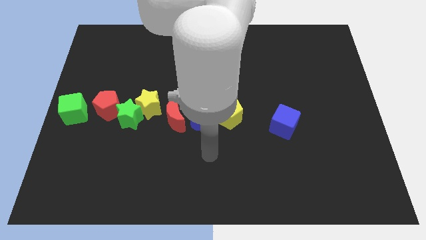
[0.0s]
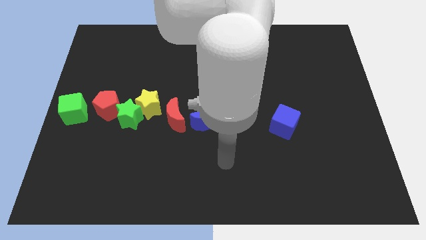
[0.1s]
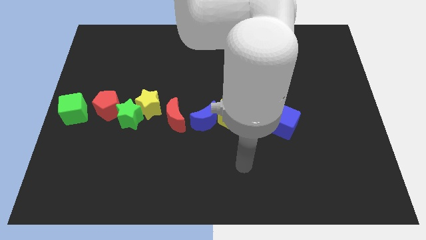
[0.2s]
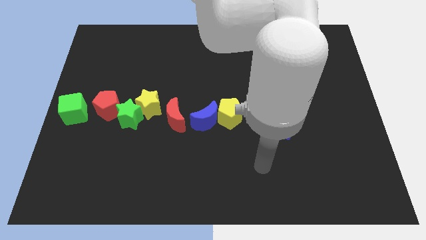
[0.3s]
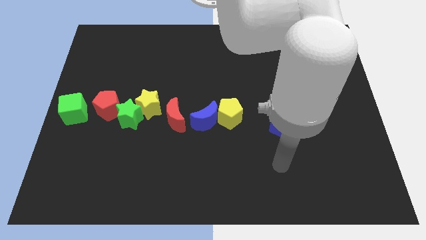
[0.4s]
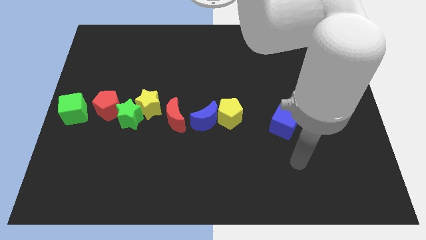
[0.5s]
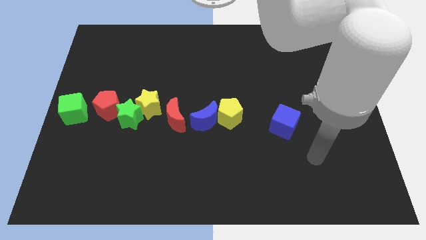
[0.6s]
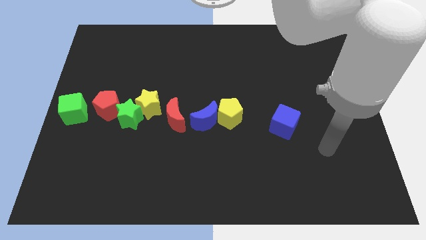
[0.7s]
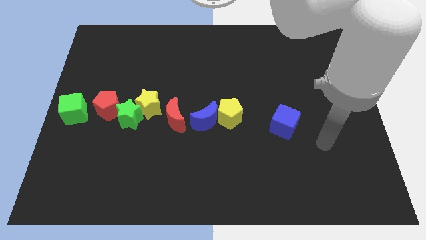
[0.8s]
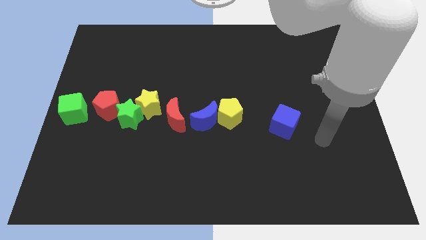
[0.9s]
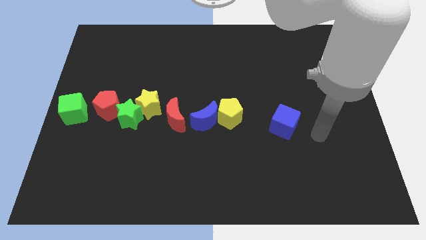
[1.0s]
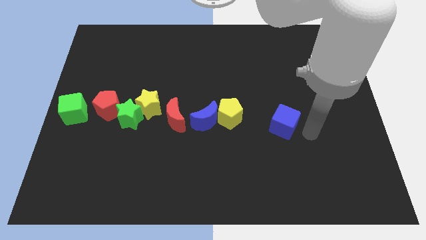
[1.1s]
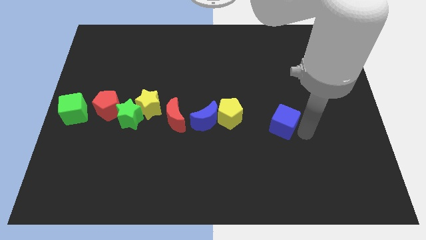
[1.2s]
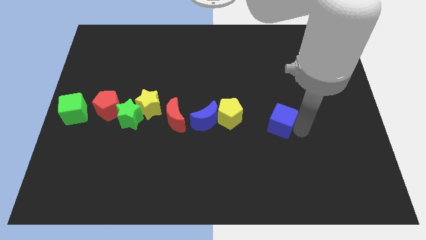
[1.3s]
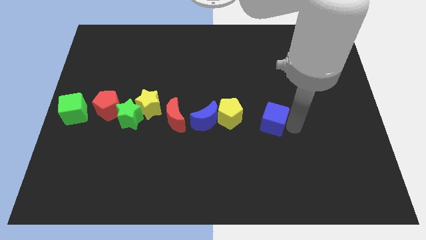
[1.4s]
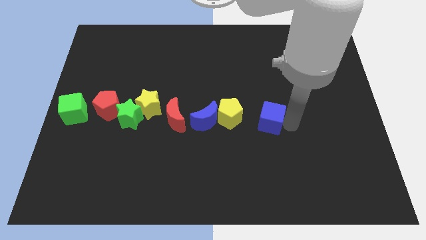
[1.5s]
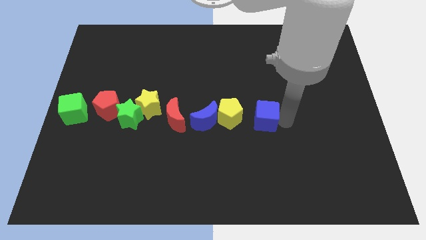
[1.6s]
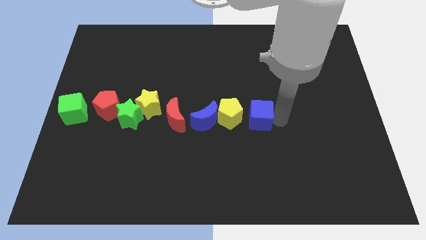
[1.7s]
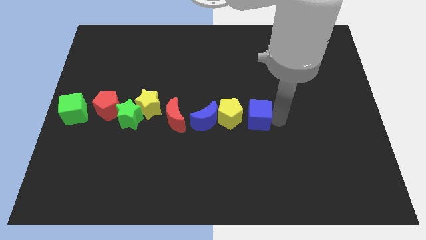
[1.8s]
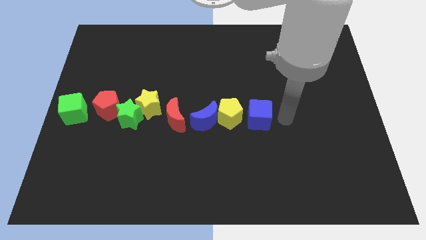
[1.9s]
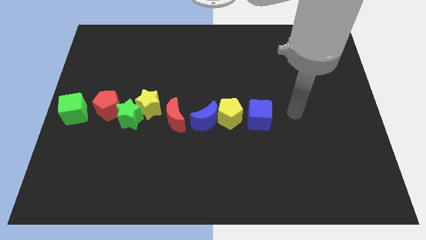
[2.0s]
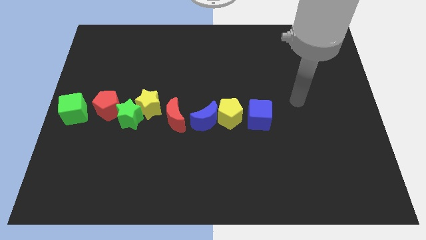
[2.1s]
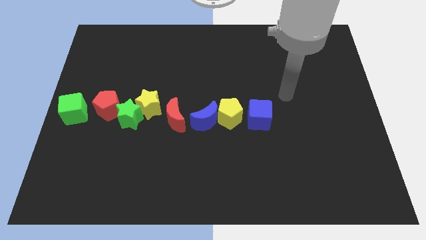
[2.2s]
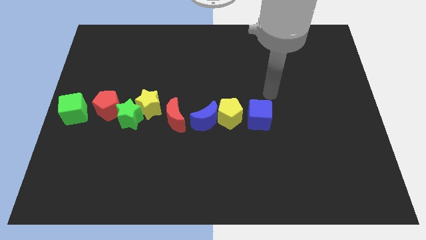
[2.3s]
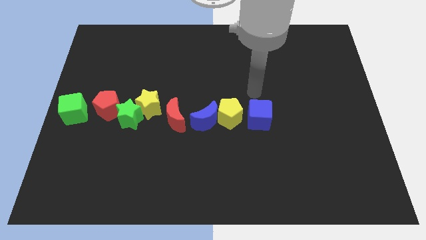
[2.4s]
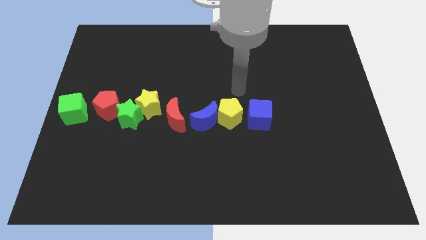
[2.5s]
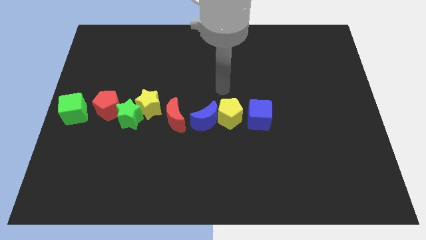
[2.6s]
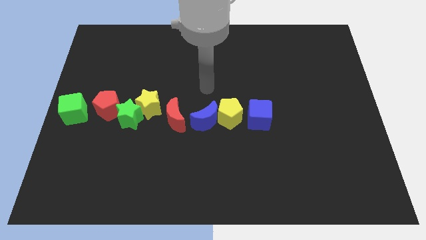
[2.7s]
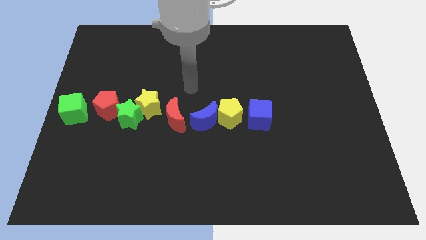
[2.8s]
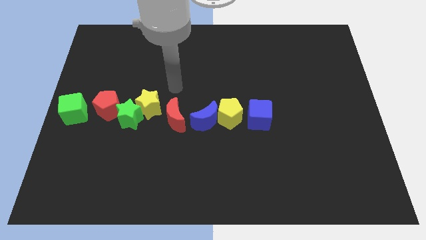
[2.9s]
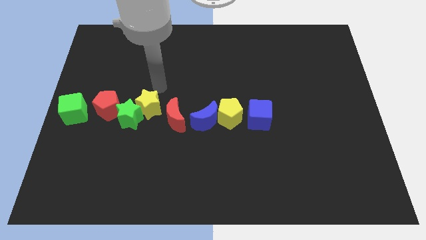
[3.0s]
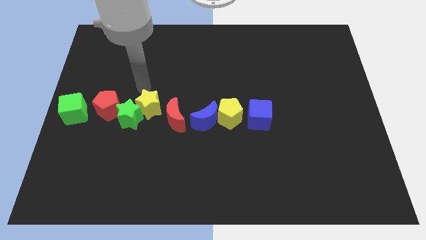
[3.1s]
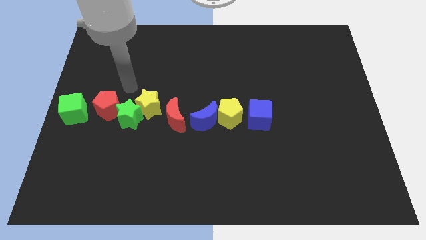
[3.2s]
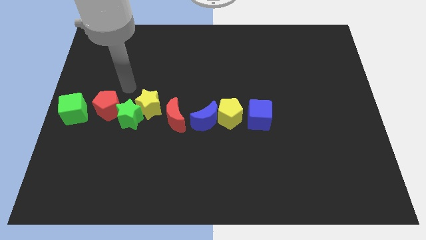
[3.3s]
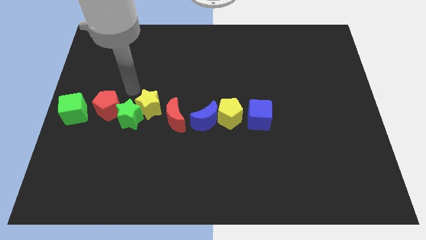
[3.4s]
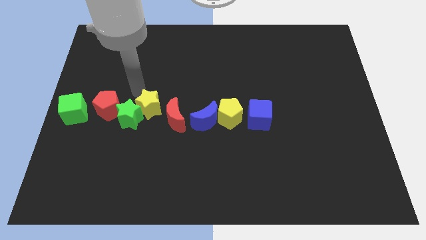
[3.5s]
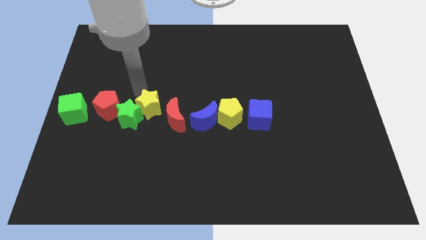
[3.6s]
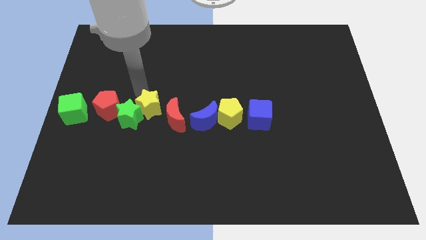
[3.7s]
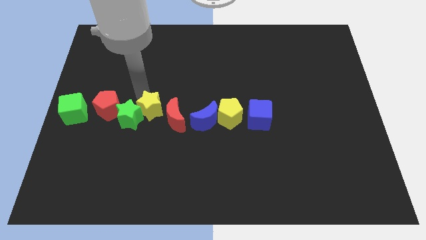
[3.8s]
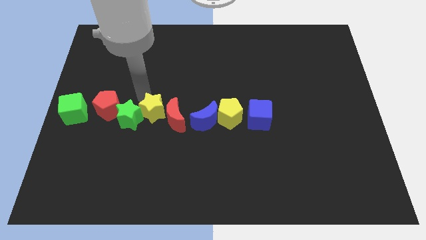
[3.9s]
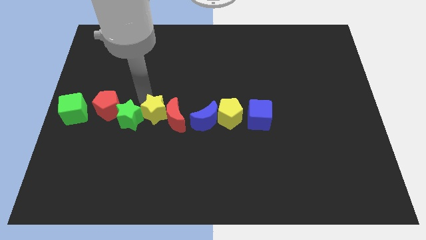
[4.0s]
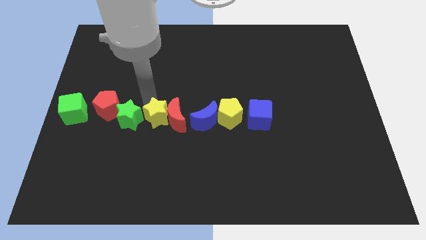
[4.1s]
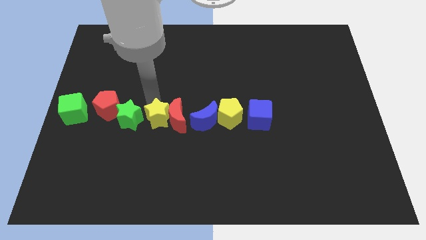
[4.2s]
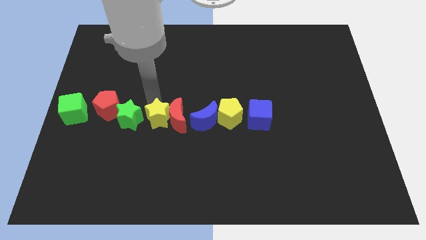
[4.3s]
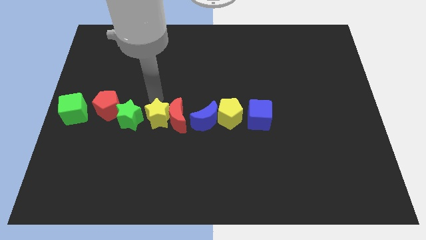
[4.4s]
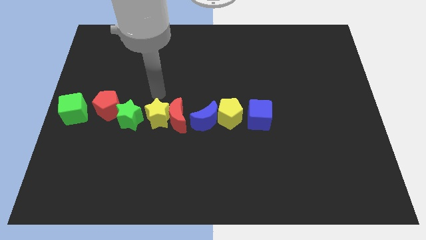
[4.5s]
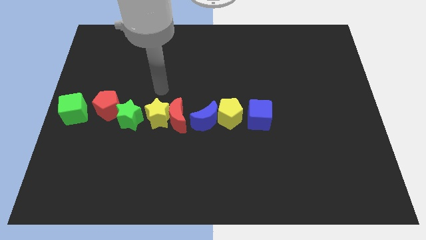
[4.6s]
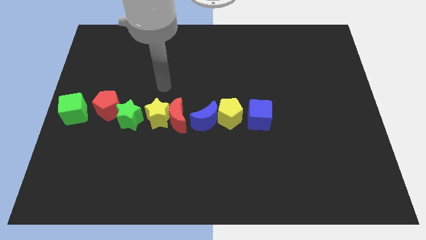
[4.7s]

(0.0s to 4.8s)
adjust the blue cube and the yellow star to form a line with a group of blocks

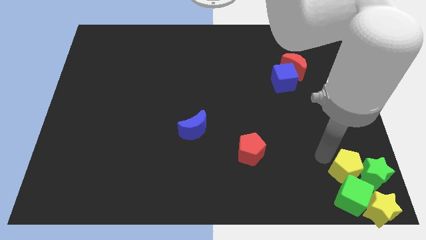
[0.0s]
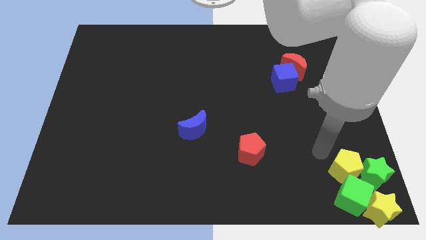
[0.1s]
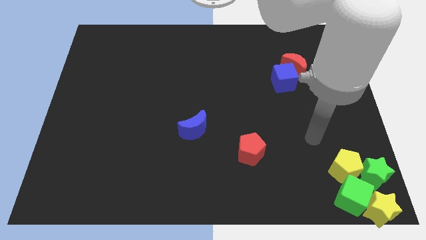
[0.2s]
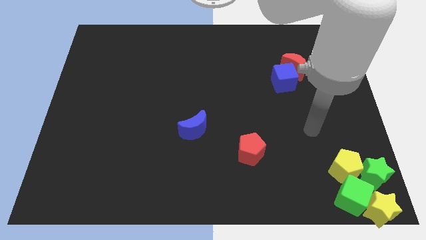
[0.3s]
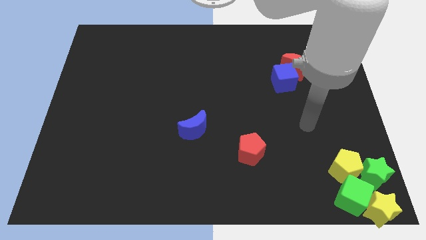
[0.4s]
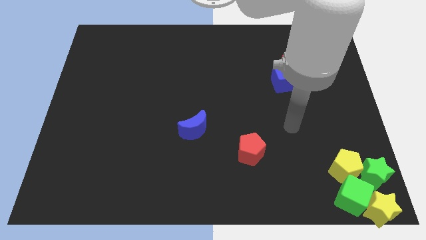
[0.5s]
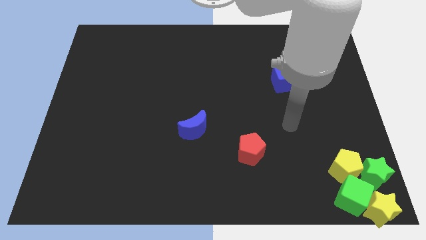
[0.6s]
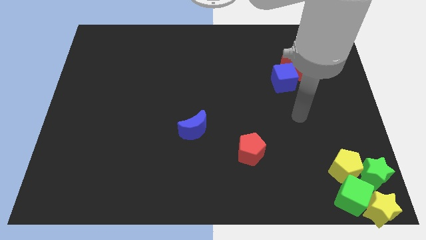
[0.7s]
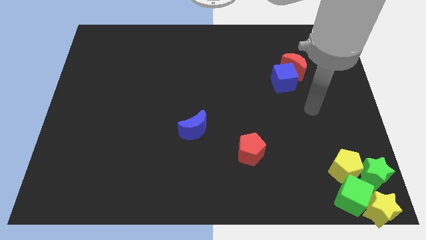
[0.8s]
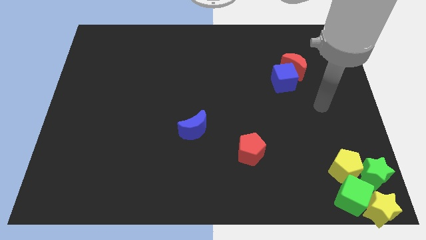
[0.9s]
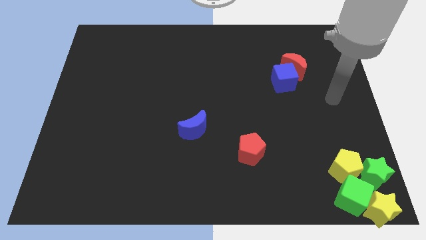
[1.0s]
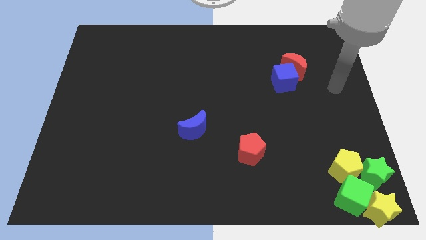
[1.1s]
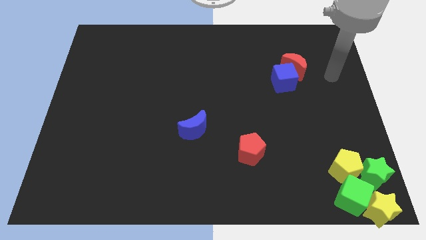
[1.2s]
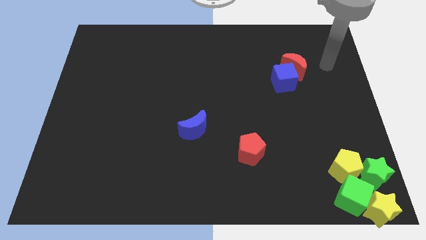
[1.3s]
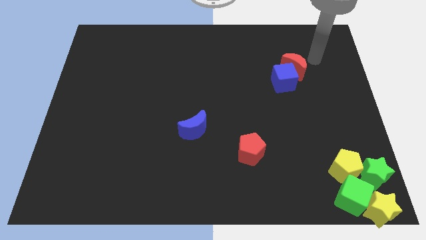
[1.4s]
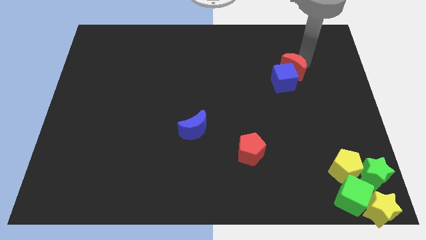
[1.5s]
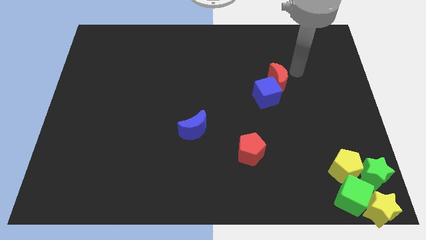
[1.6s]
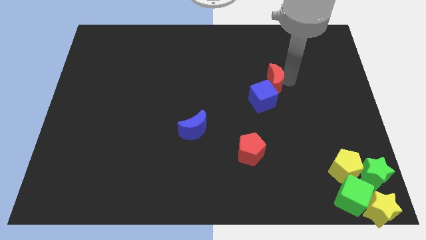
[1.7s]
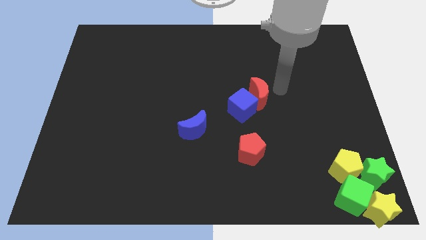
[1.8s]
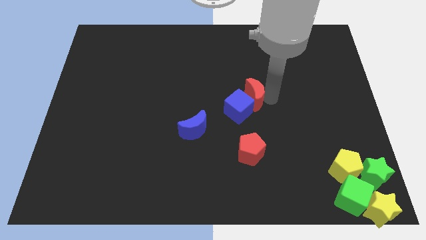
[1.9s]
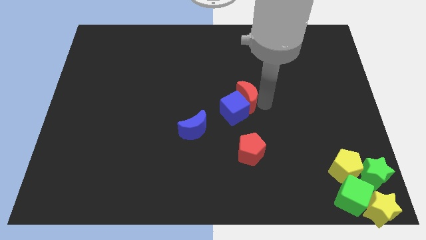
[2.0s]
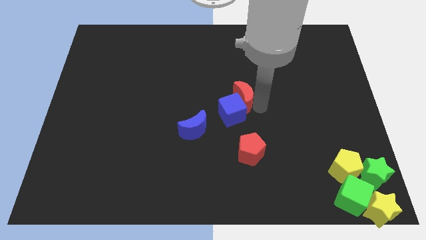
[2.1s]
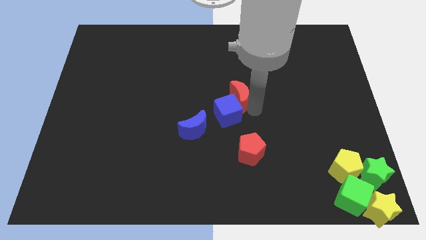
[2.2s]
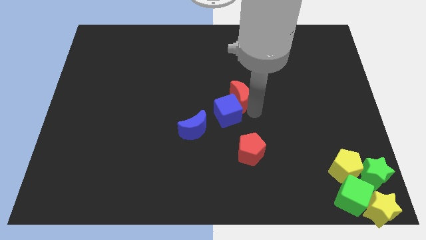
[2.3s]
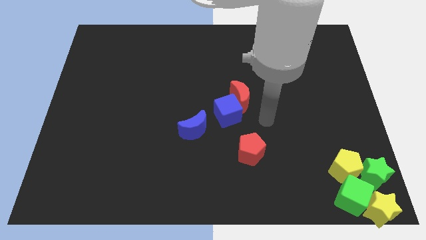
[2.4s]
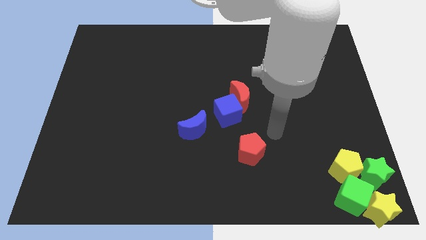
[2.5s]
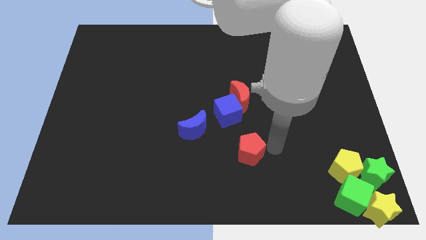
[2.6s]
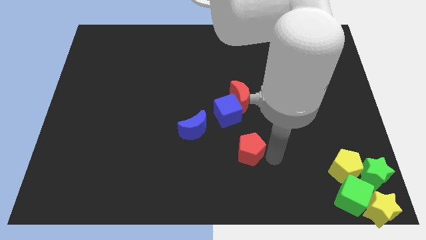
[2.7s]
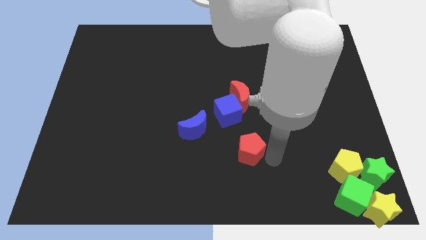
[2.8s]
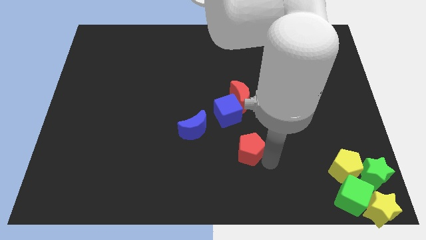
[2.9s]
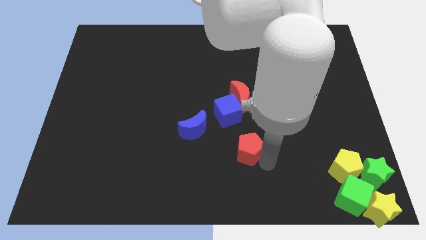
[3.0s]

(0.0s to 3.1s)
slide the red moon and the blue cube to the top right side of the blue moon

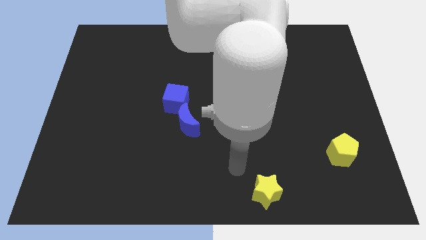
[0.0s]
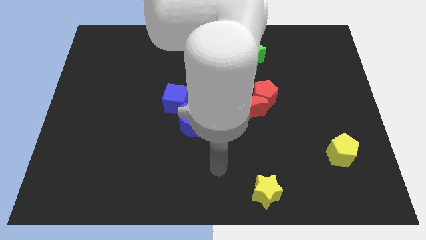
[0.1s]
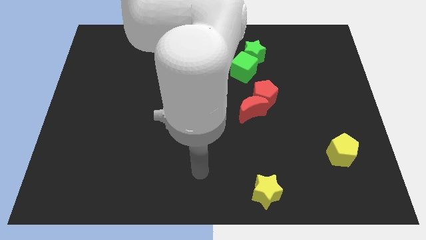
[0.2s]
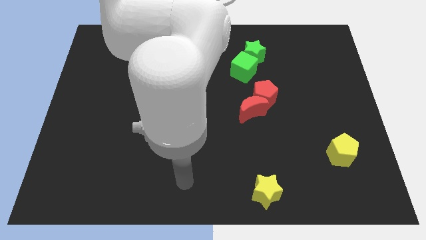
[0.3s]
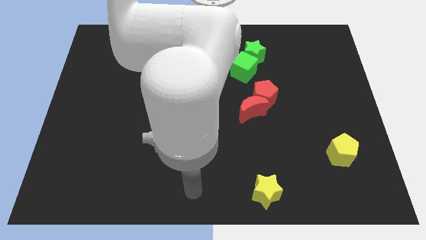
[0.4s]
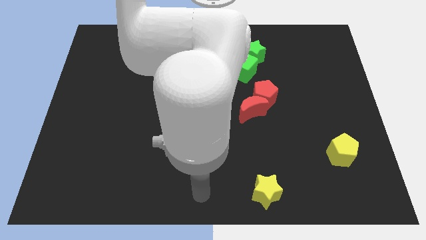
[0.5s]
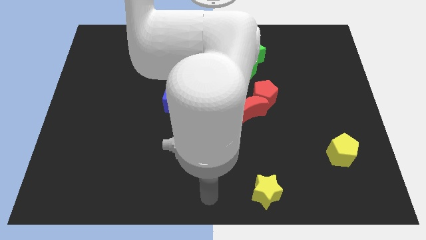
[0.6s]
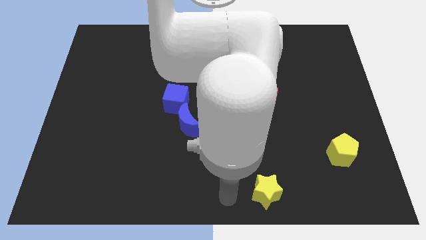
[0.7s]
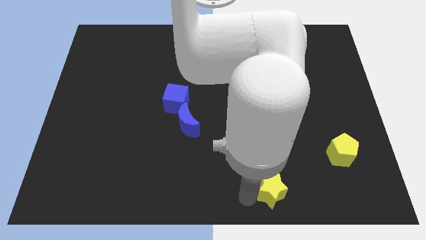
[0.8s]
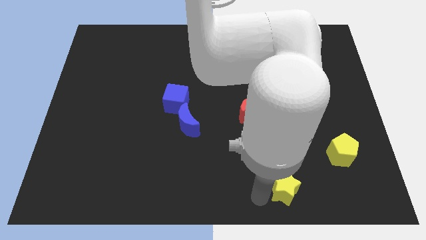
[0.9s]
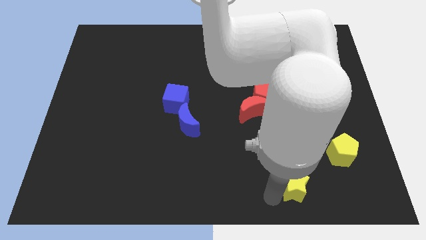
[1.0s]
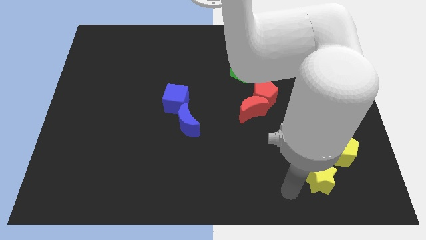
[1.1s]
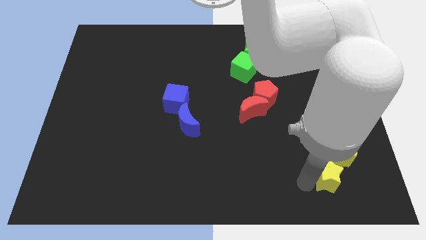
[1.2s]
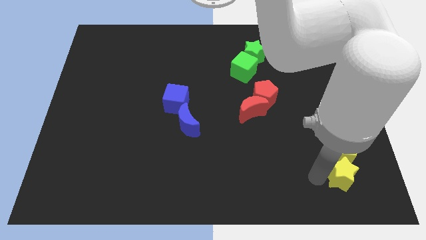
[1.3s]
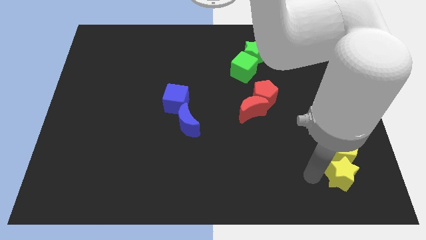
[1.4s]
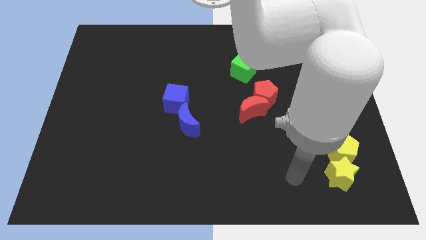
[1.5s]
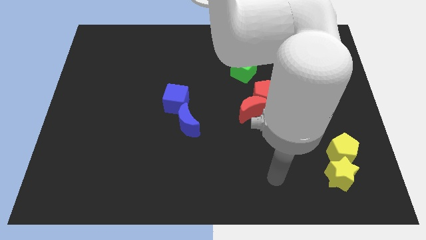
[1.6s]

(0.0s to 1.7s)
move the yellow star below the yellow pentagon
